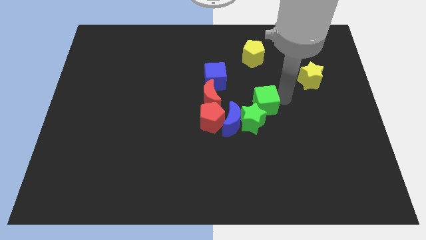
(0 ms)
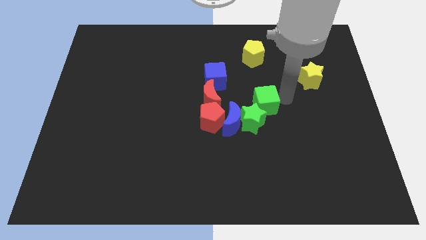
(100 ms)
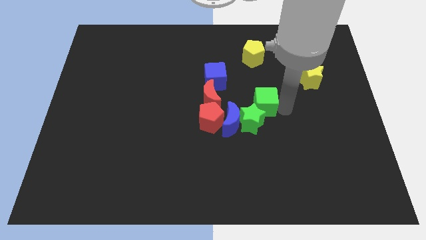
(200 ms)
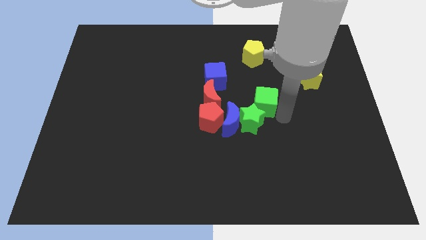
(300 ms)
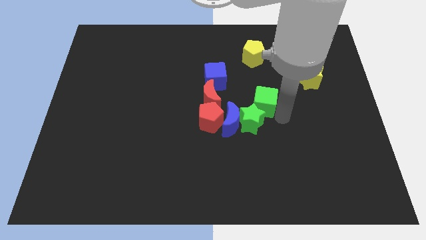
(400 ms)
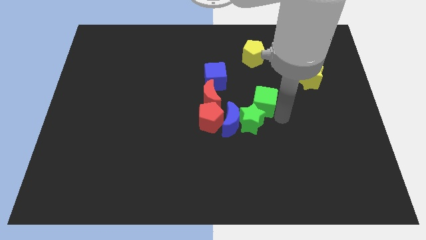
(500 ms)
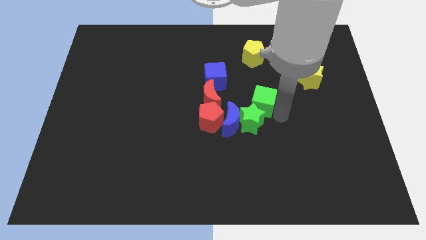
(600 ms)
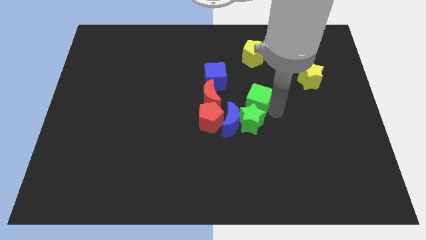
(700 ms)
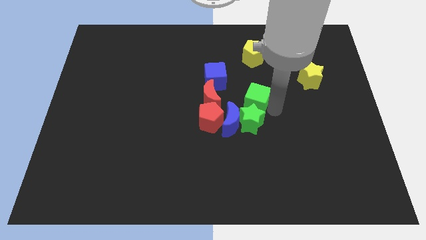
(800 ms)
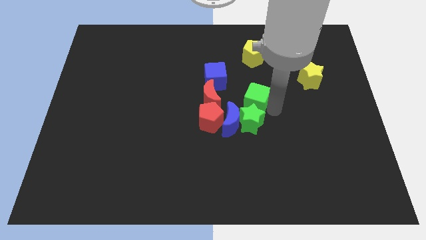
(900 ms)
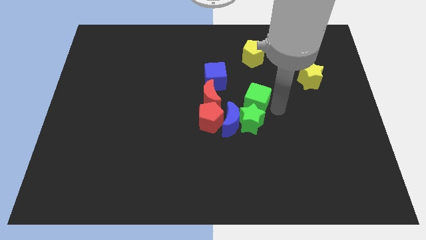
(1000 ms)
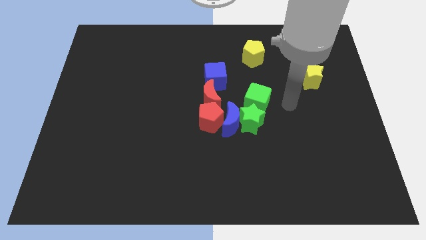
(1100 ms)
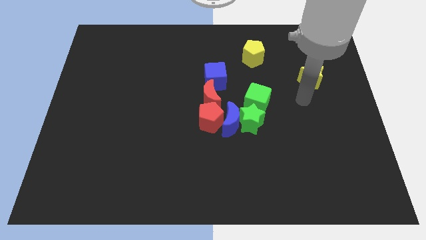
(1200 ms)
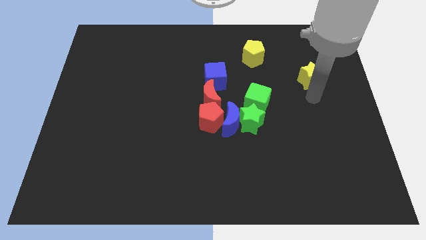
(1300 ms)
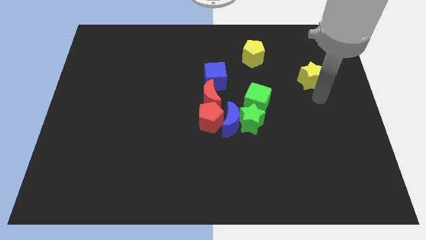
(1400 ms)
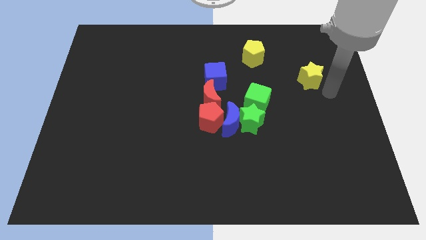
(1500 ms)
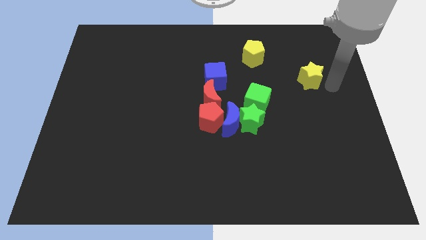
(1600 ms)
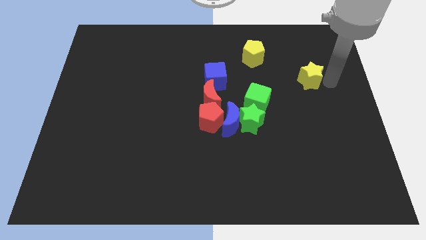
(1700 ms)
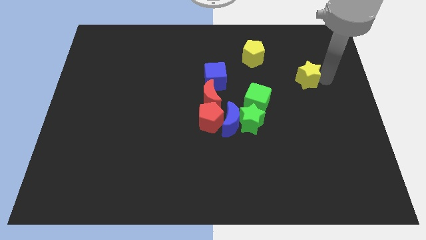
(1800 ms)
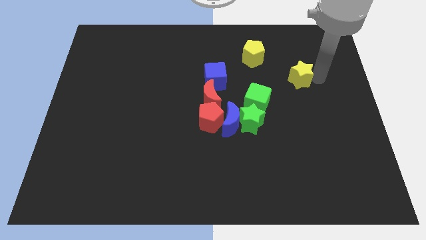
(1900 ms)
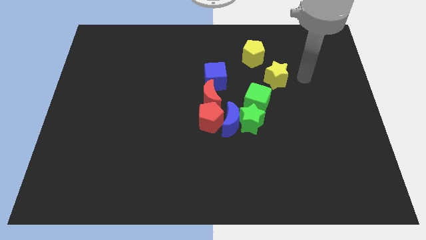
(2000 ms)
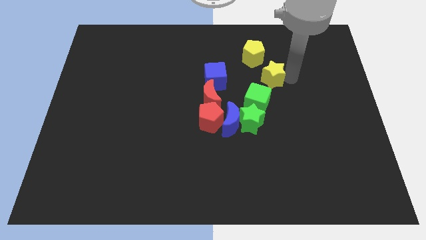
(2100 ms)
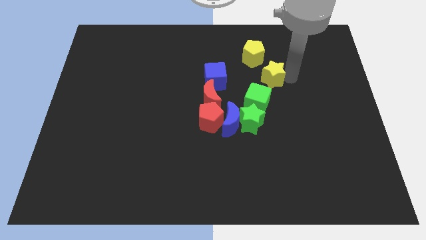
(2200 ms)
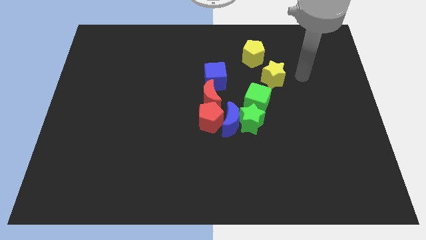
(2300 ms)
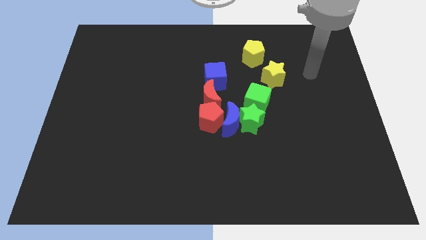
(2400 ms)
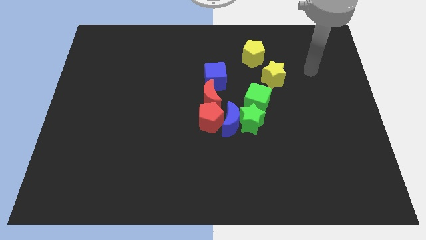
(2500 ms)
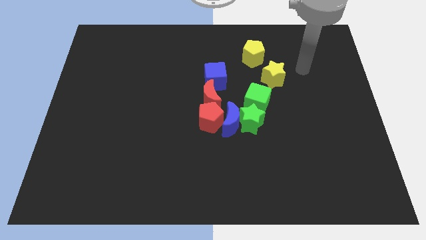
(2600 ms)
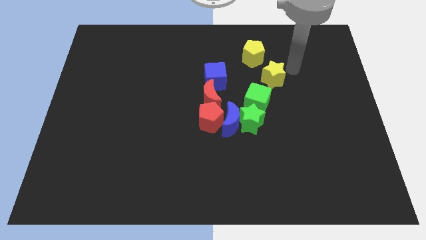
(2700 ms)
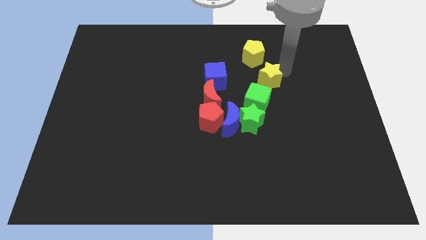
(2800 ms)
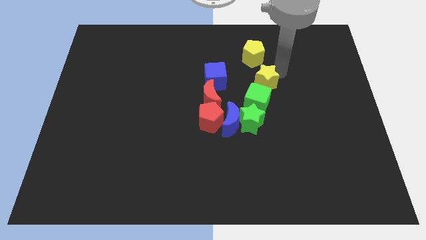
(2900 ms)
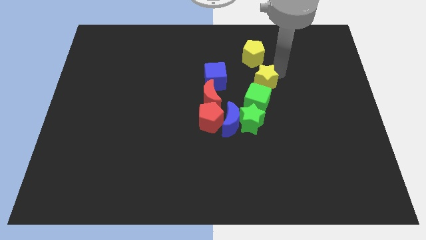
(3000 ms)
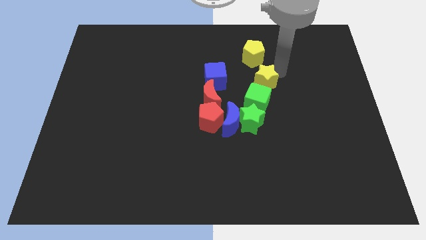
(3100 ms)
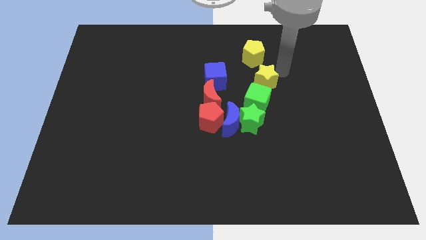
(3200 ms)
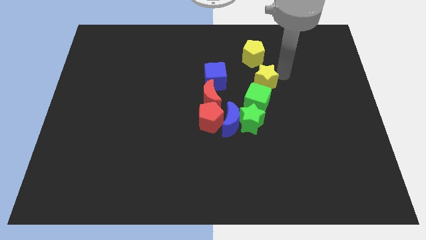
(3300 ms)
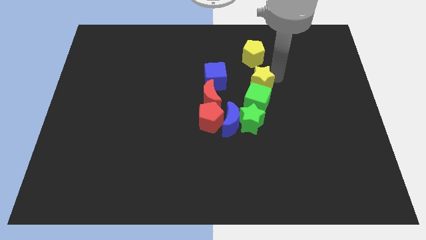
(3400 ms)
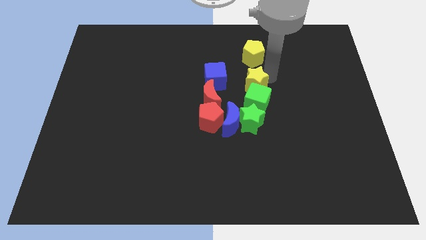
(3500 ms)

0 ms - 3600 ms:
place the yellow star above the green cube

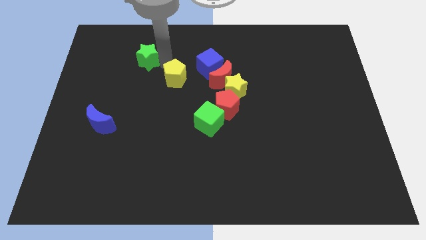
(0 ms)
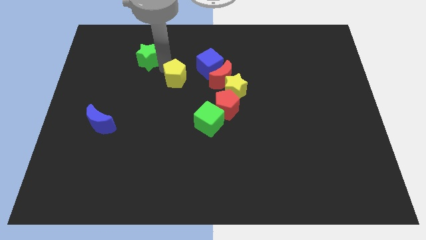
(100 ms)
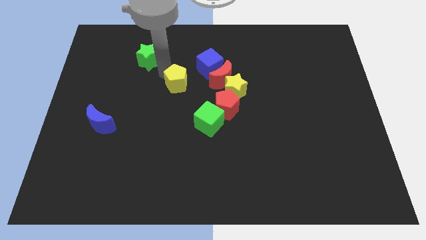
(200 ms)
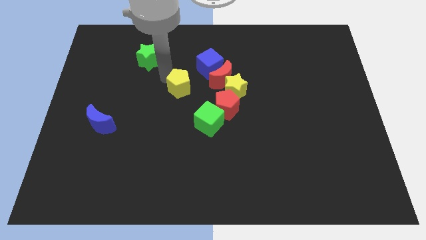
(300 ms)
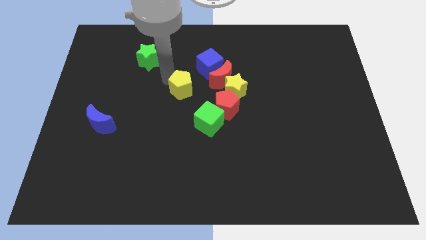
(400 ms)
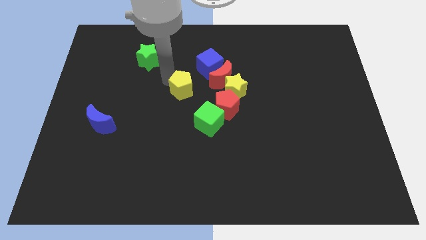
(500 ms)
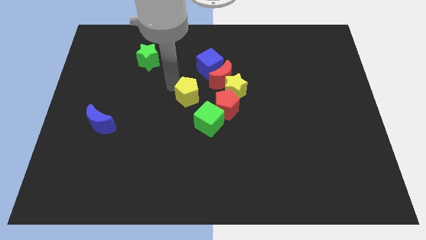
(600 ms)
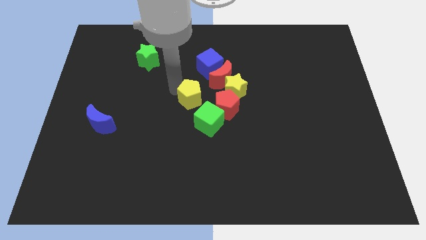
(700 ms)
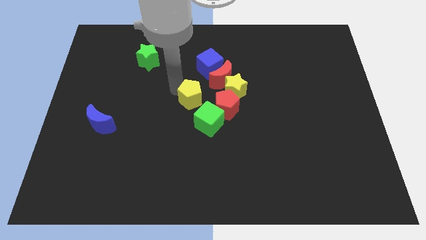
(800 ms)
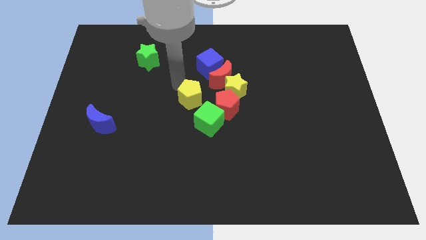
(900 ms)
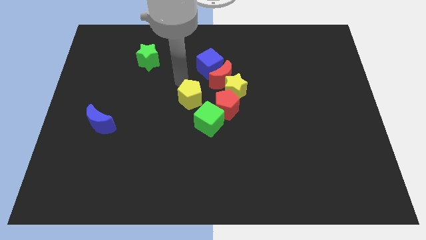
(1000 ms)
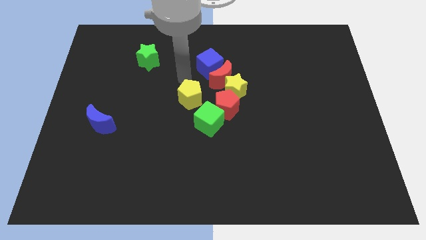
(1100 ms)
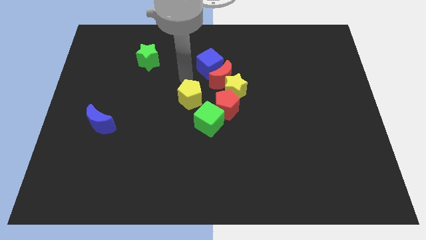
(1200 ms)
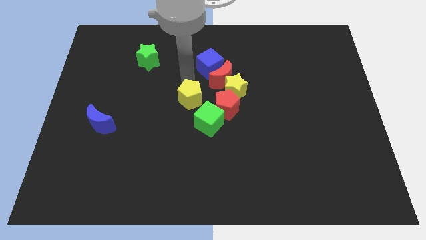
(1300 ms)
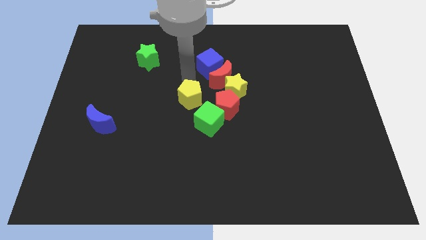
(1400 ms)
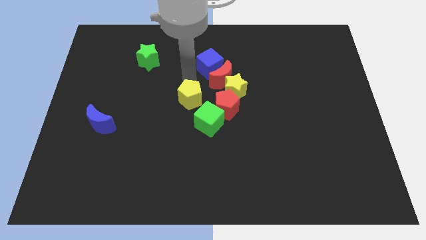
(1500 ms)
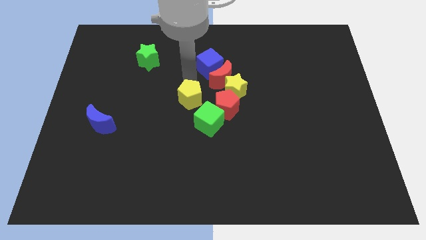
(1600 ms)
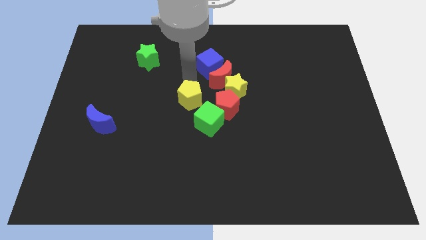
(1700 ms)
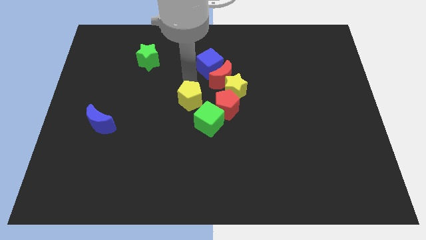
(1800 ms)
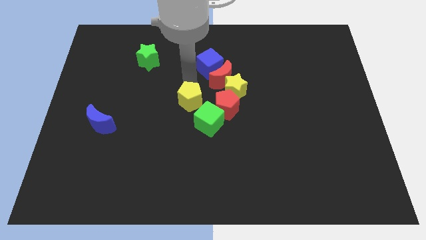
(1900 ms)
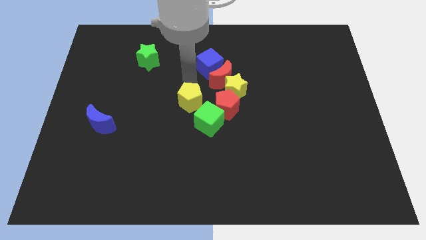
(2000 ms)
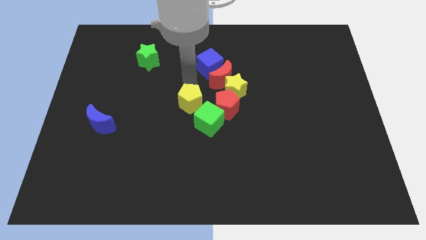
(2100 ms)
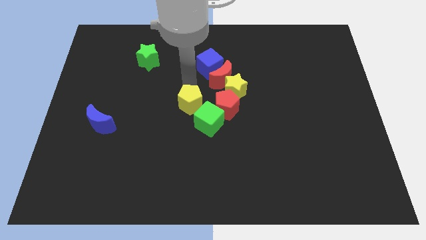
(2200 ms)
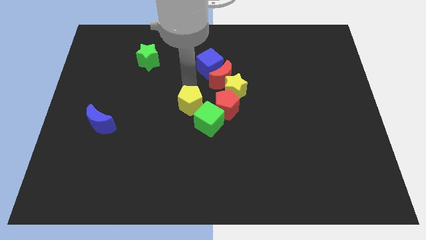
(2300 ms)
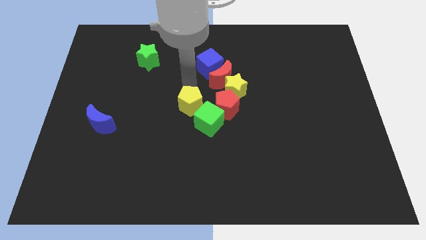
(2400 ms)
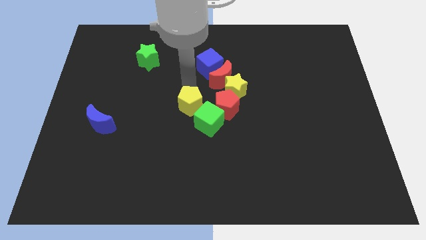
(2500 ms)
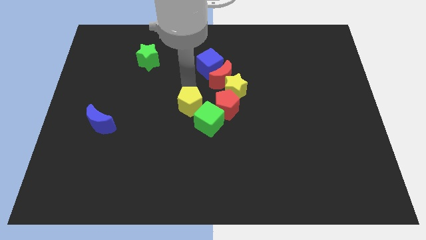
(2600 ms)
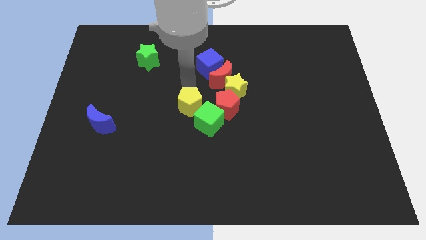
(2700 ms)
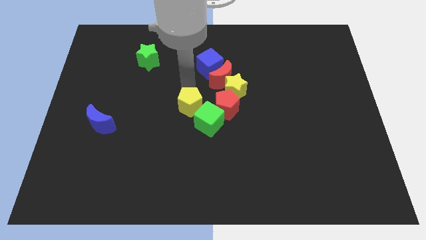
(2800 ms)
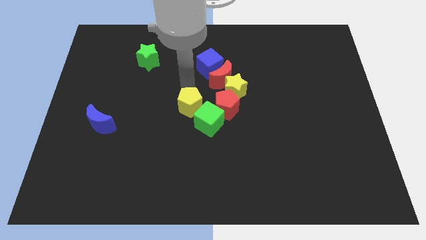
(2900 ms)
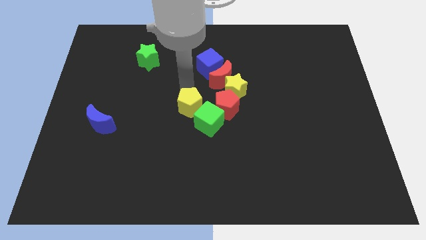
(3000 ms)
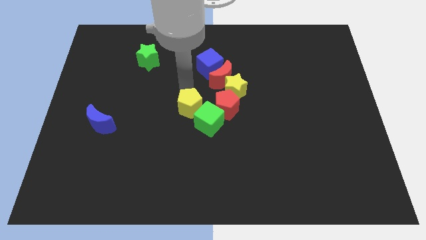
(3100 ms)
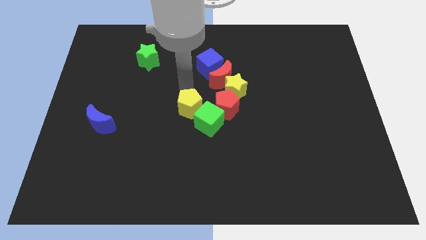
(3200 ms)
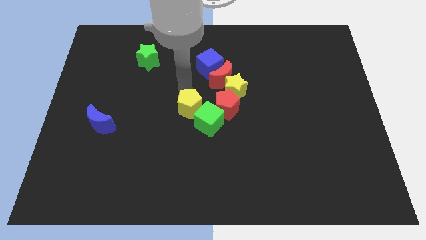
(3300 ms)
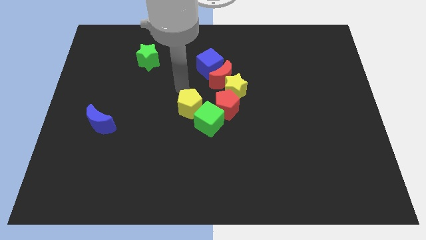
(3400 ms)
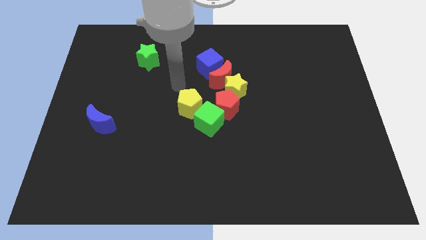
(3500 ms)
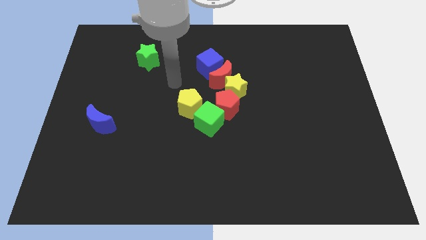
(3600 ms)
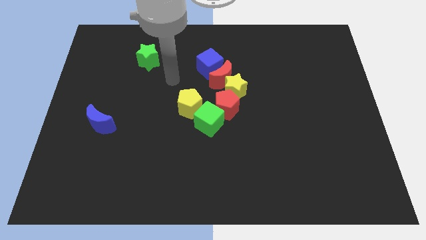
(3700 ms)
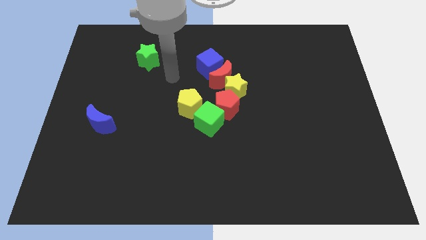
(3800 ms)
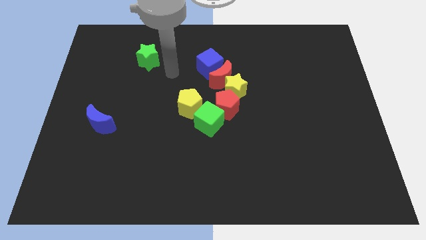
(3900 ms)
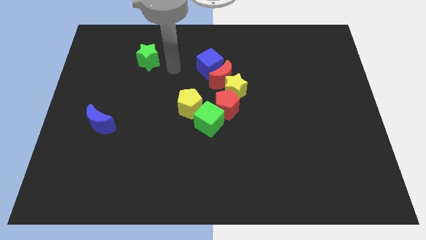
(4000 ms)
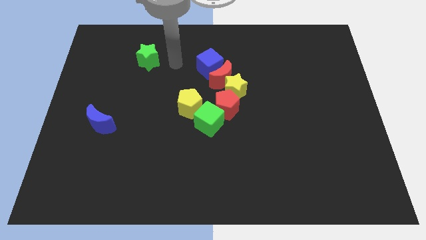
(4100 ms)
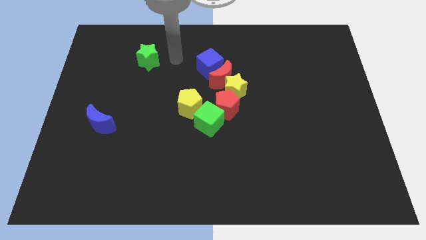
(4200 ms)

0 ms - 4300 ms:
place the yellow pentagon top left to green cube

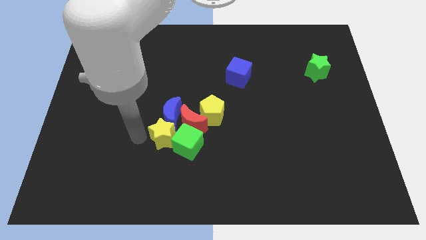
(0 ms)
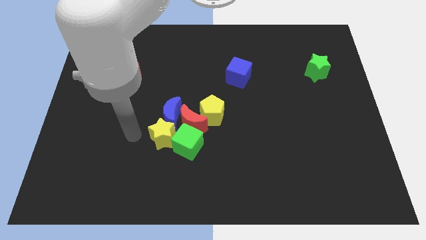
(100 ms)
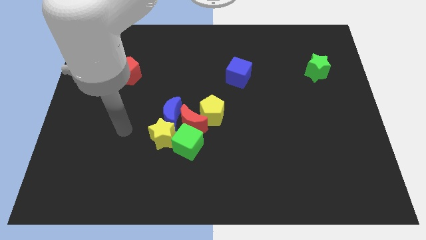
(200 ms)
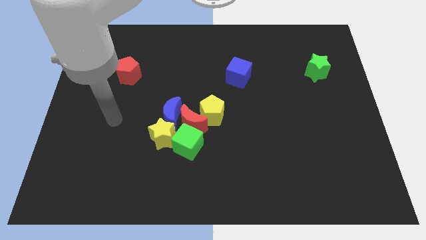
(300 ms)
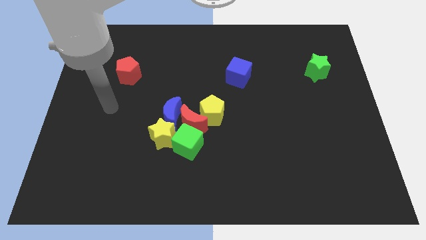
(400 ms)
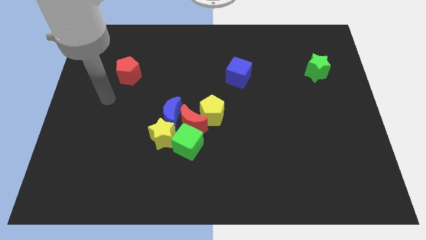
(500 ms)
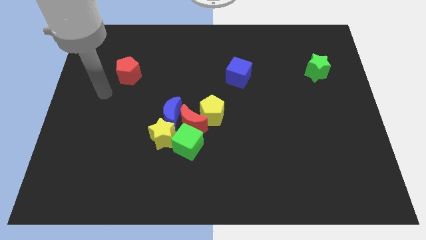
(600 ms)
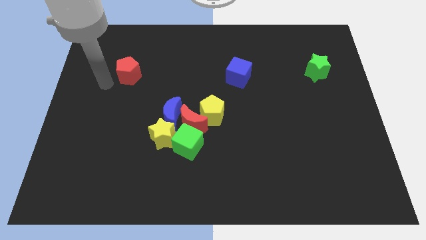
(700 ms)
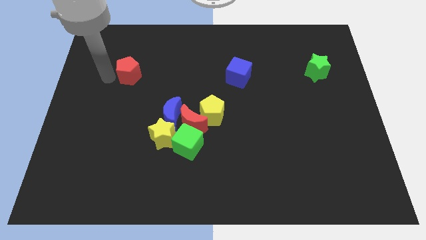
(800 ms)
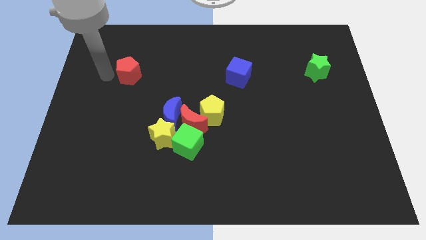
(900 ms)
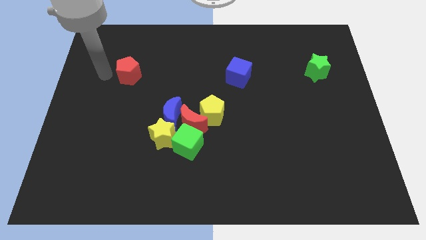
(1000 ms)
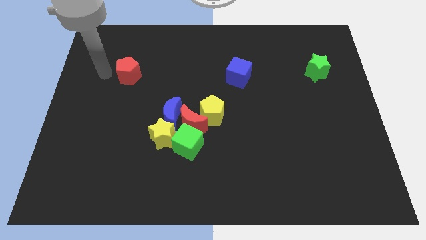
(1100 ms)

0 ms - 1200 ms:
move your arm towards the left of red pentagon
